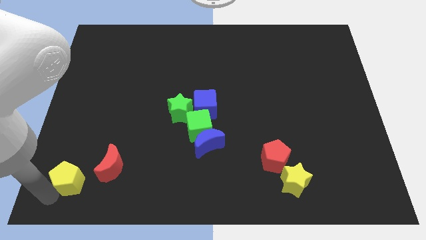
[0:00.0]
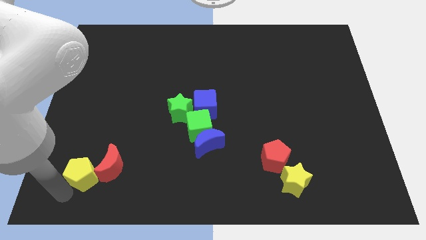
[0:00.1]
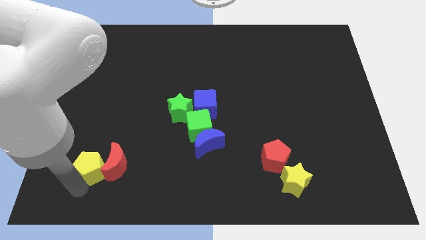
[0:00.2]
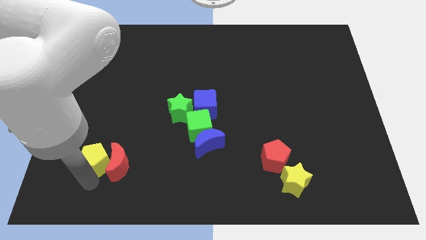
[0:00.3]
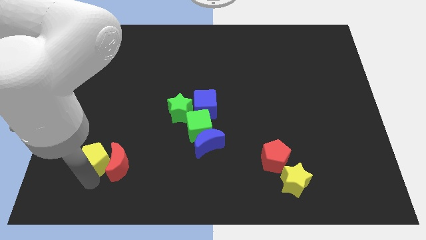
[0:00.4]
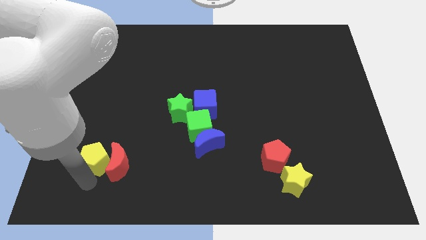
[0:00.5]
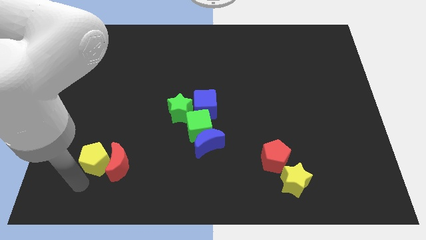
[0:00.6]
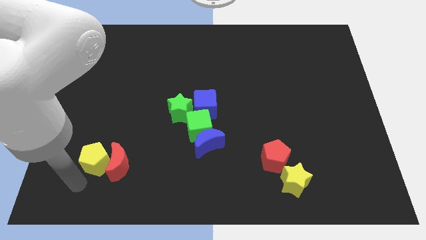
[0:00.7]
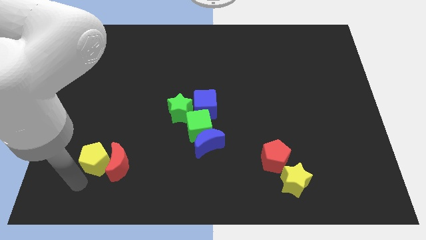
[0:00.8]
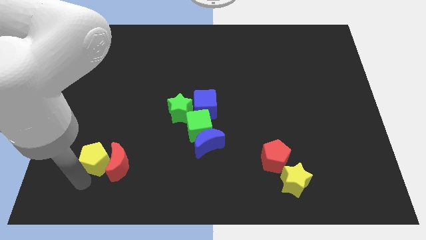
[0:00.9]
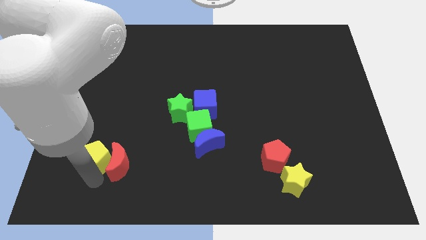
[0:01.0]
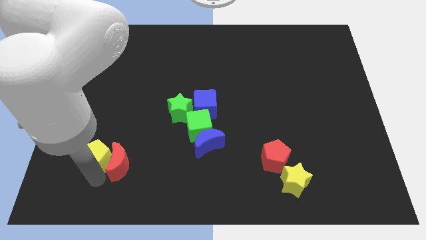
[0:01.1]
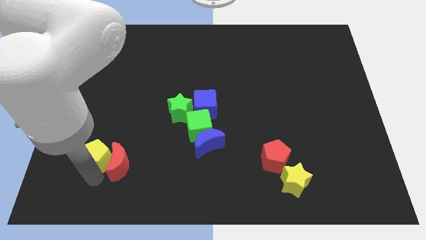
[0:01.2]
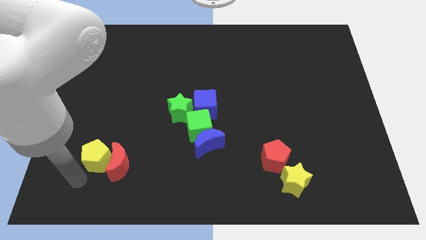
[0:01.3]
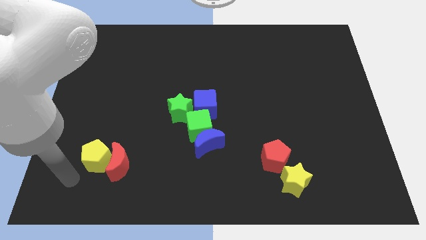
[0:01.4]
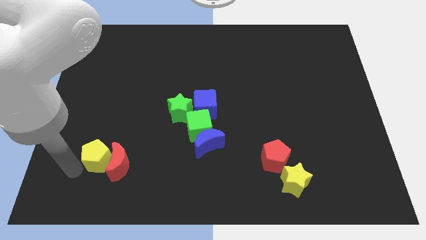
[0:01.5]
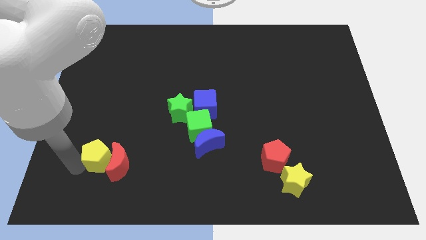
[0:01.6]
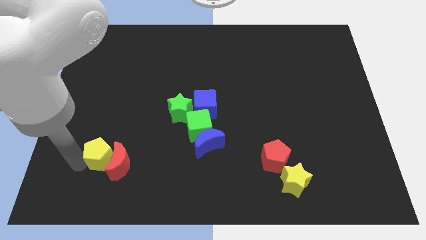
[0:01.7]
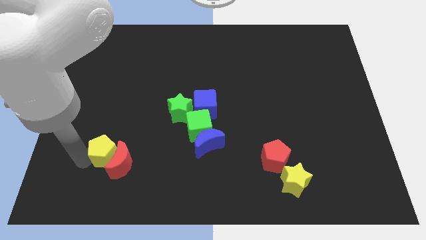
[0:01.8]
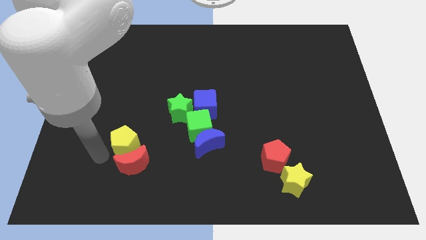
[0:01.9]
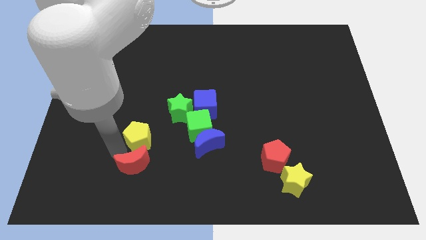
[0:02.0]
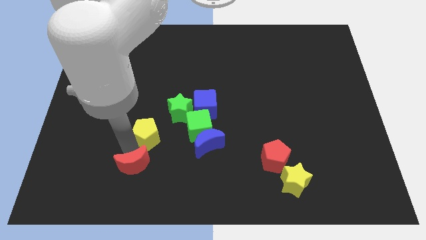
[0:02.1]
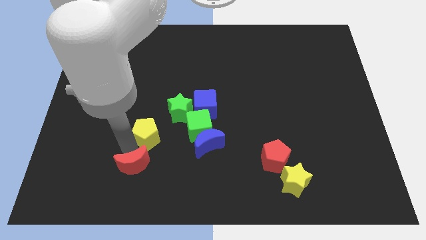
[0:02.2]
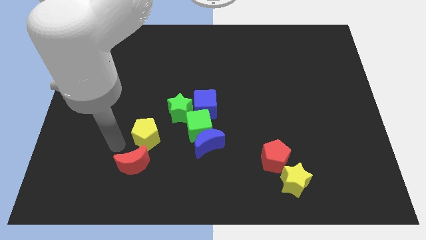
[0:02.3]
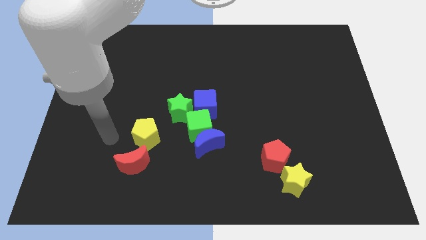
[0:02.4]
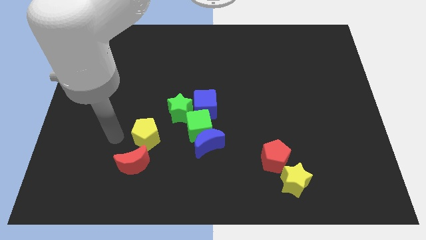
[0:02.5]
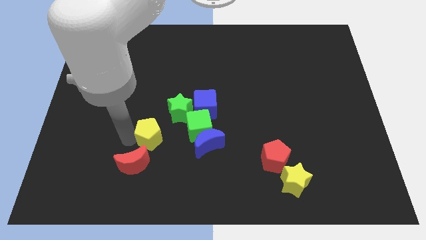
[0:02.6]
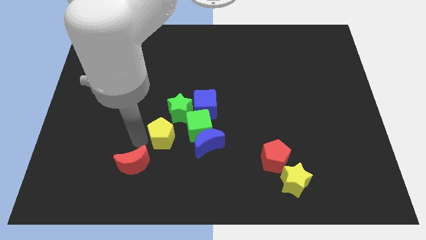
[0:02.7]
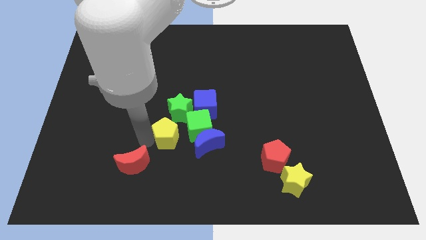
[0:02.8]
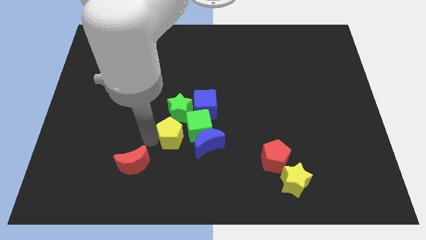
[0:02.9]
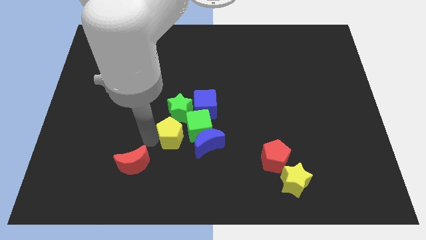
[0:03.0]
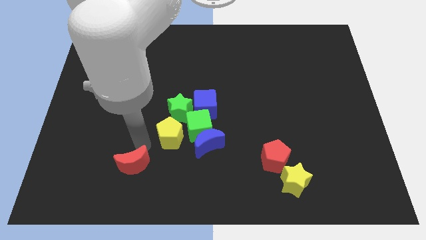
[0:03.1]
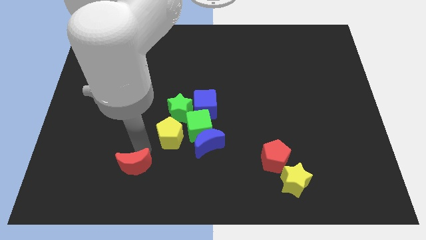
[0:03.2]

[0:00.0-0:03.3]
separate yellow pentagon from red moon

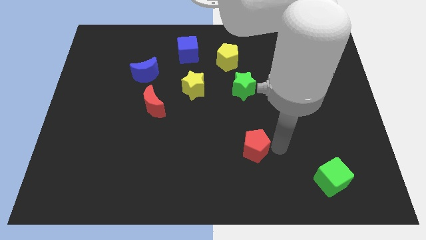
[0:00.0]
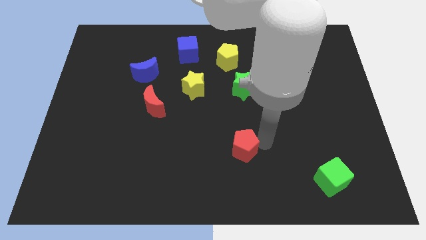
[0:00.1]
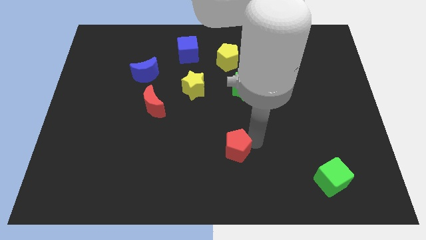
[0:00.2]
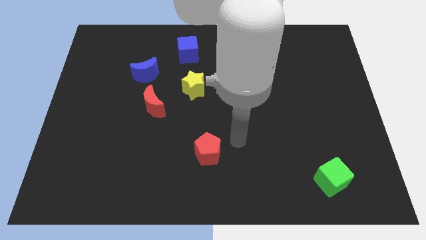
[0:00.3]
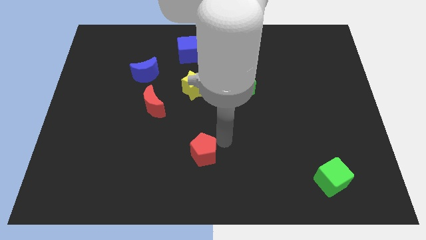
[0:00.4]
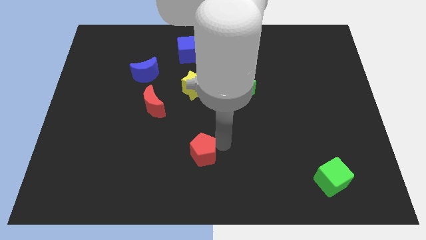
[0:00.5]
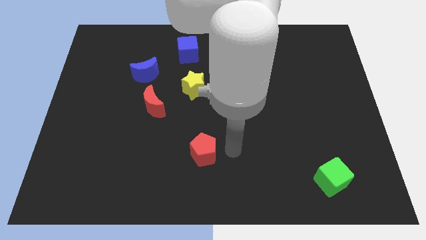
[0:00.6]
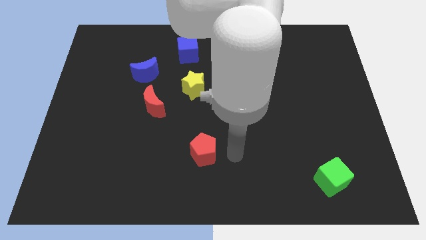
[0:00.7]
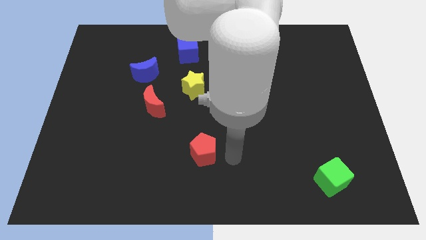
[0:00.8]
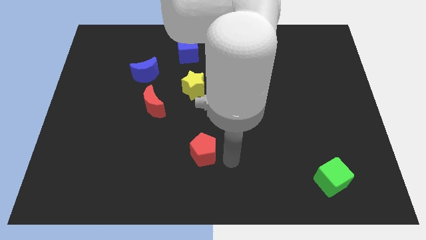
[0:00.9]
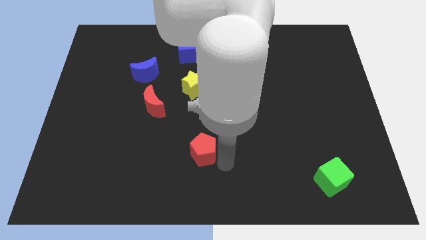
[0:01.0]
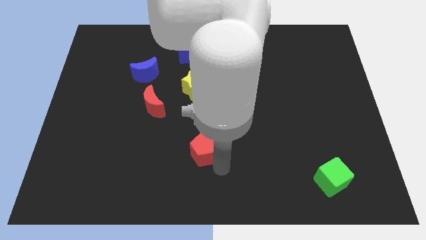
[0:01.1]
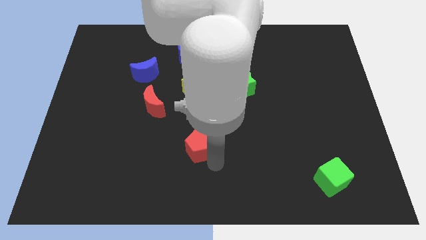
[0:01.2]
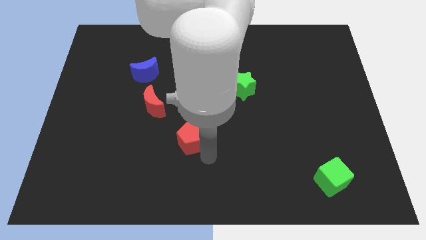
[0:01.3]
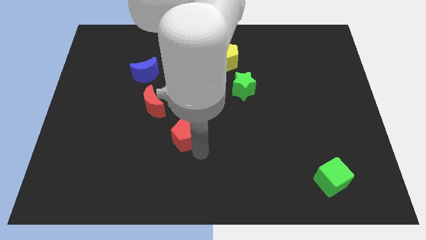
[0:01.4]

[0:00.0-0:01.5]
push the red pentagon below the yellow star

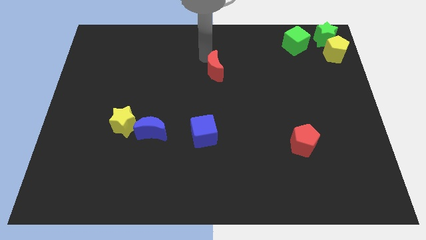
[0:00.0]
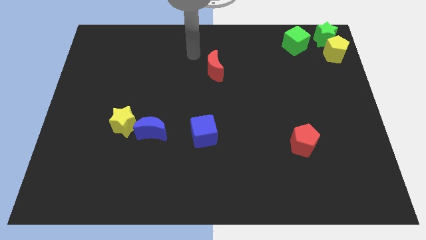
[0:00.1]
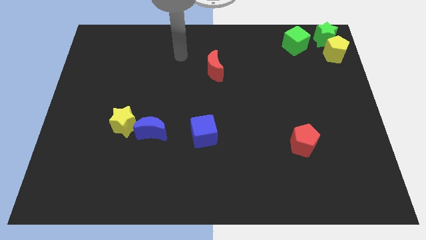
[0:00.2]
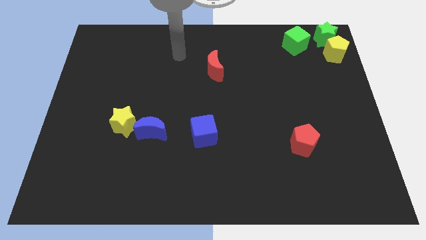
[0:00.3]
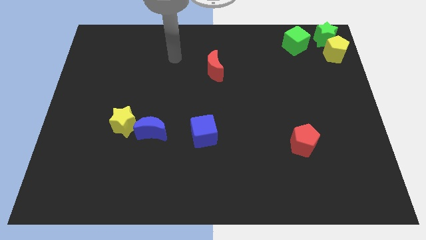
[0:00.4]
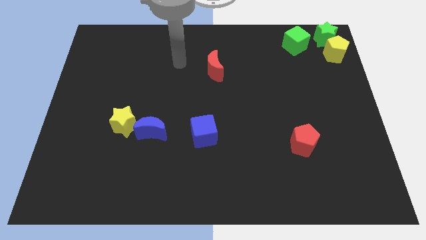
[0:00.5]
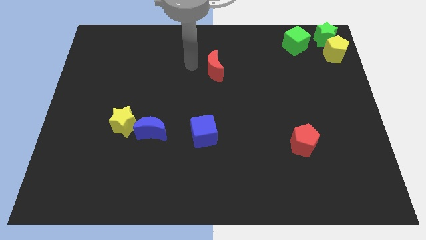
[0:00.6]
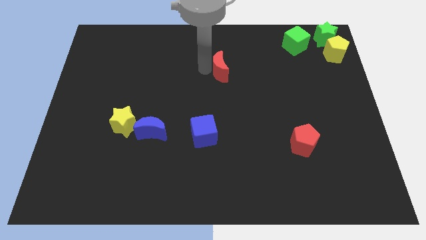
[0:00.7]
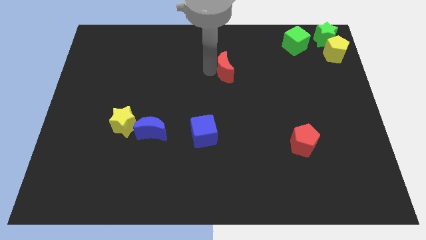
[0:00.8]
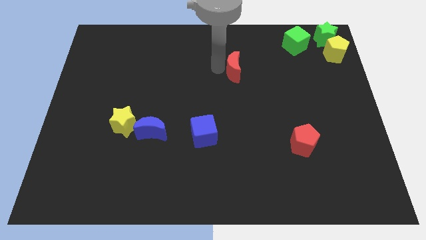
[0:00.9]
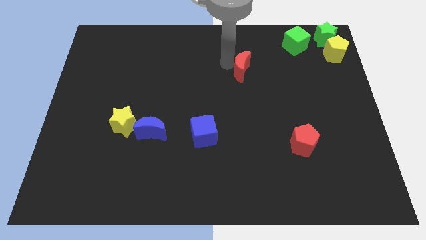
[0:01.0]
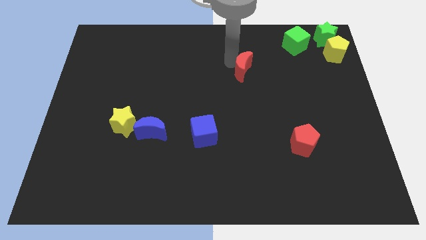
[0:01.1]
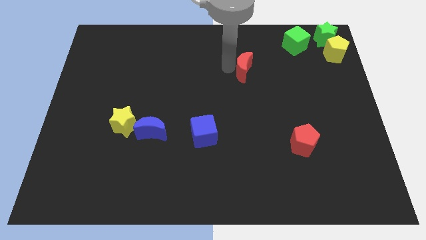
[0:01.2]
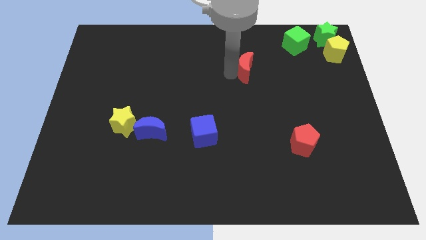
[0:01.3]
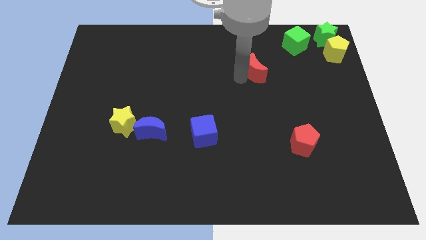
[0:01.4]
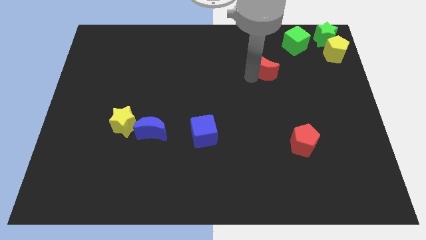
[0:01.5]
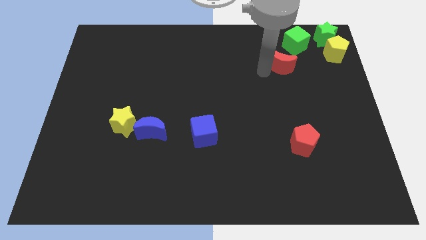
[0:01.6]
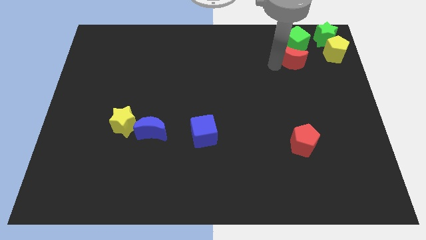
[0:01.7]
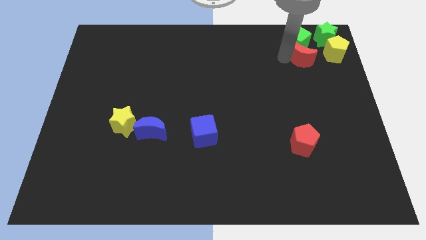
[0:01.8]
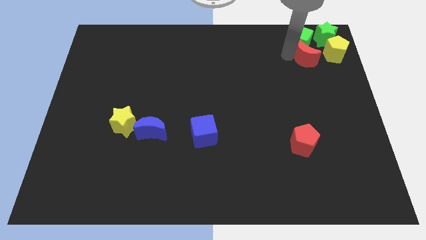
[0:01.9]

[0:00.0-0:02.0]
push the red moon close to the green cube

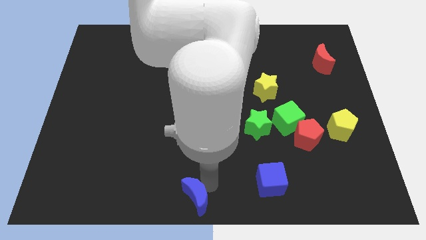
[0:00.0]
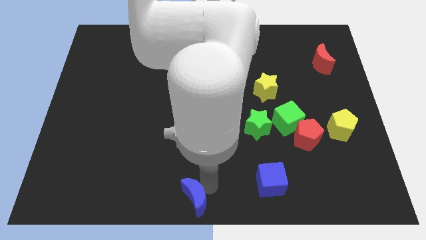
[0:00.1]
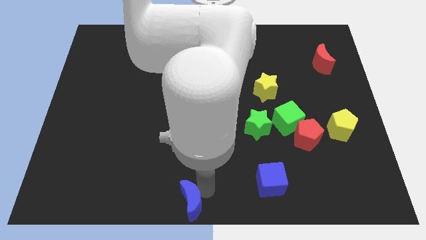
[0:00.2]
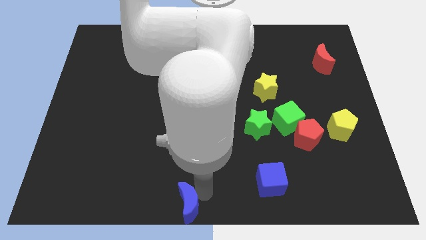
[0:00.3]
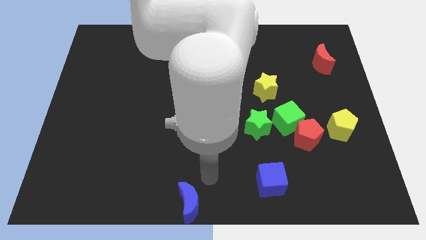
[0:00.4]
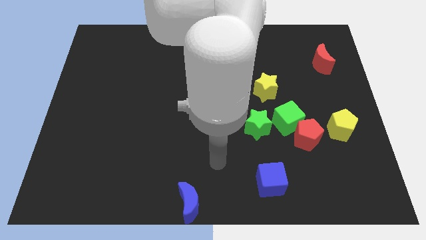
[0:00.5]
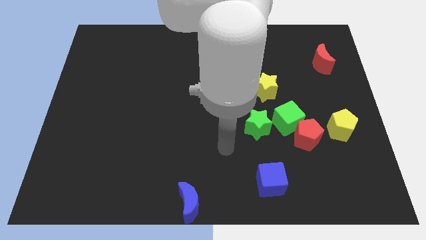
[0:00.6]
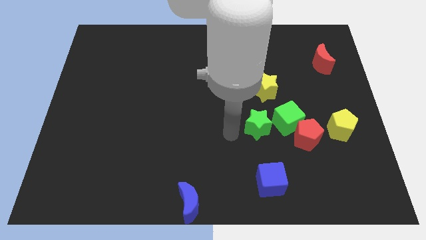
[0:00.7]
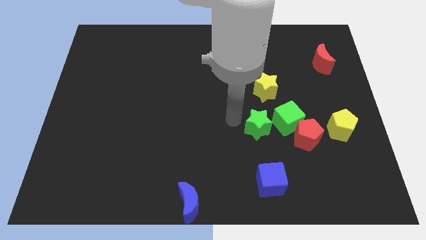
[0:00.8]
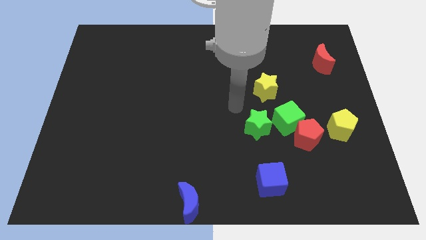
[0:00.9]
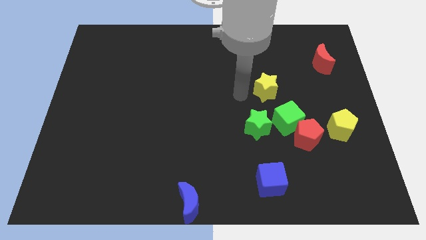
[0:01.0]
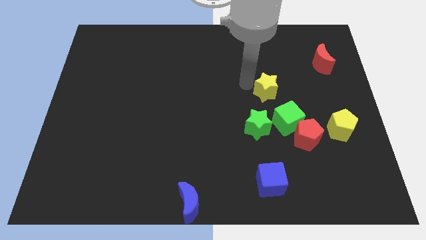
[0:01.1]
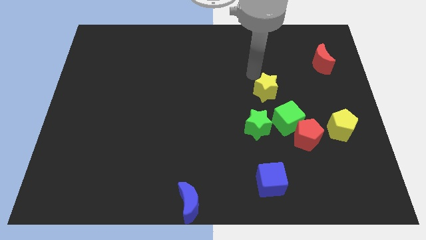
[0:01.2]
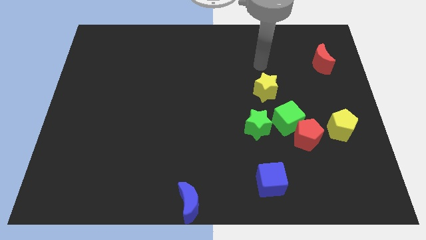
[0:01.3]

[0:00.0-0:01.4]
move the arm away from the blue crescent

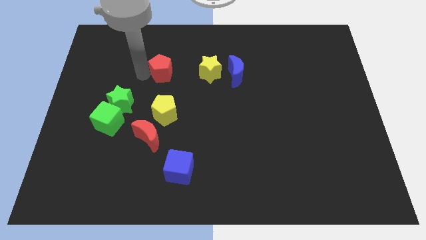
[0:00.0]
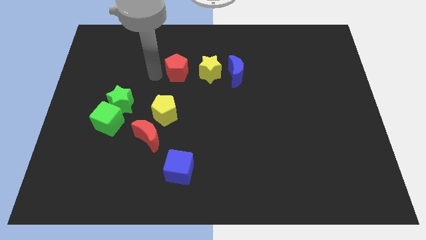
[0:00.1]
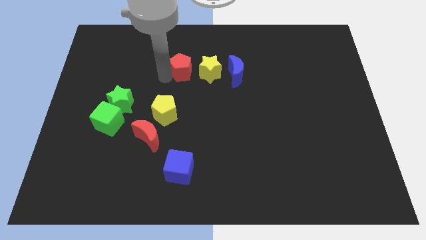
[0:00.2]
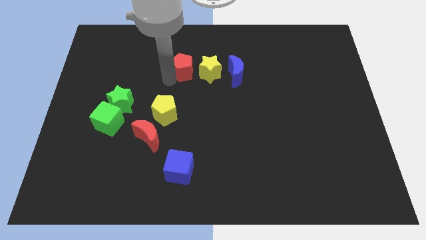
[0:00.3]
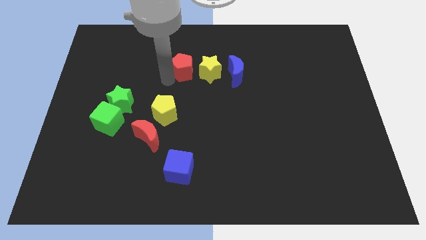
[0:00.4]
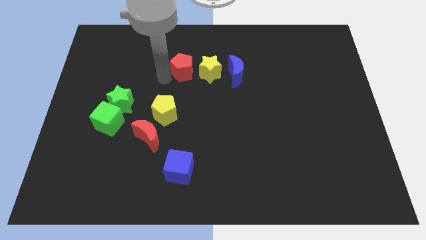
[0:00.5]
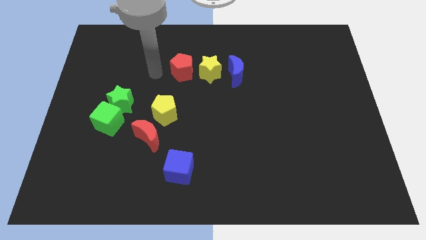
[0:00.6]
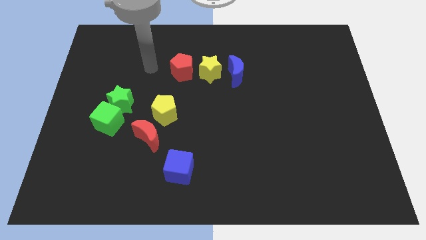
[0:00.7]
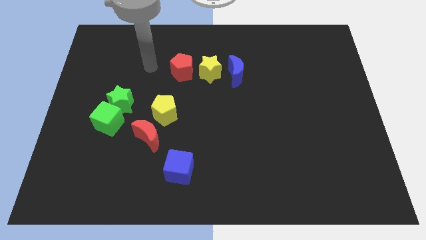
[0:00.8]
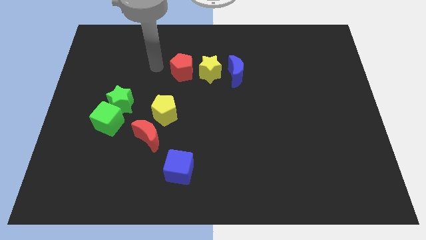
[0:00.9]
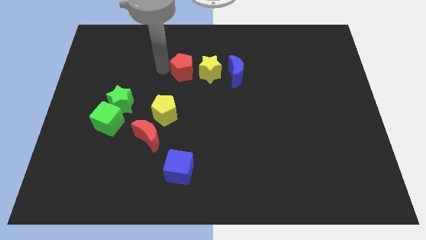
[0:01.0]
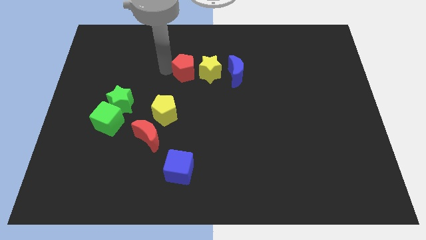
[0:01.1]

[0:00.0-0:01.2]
move red pentagon towards yellow star
